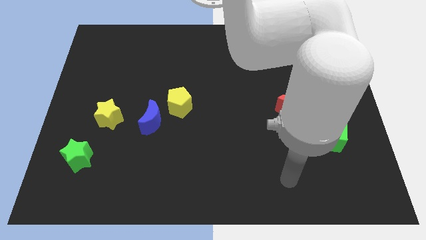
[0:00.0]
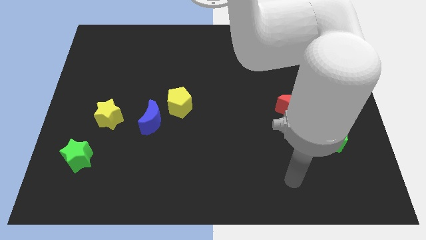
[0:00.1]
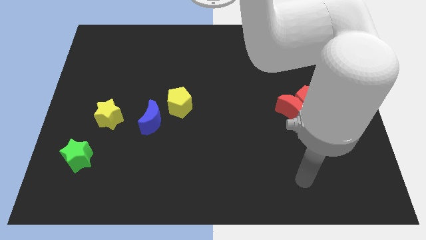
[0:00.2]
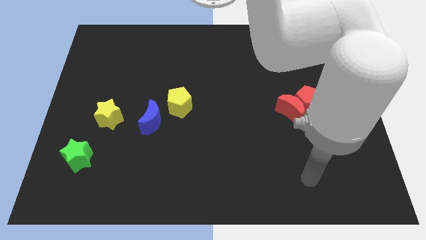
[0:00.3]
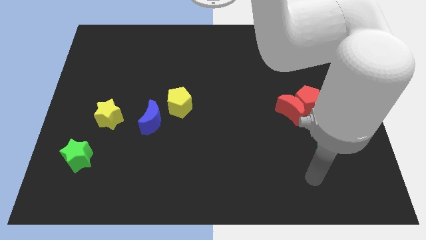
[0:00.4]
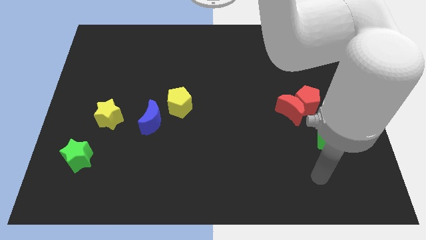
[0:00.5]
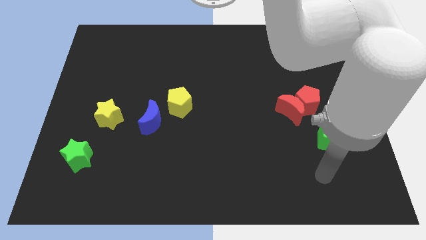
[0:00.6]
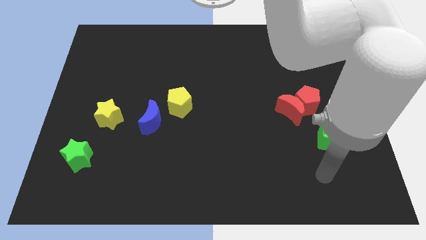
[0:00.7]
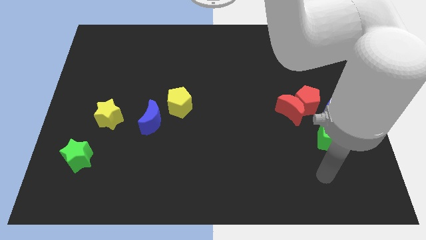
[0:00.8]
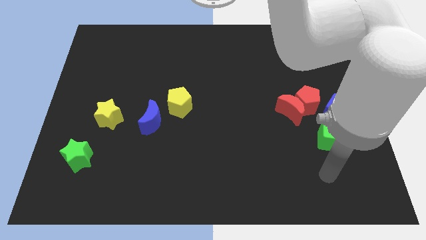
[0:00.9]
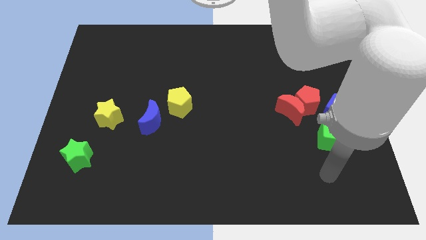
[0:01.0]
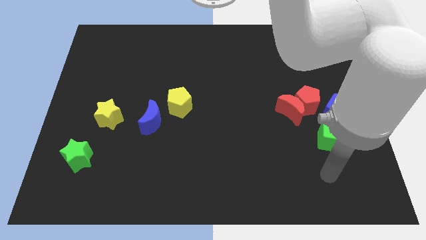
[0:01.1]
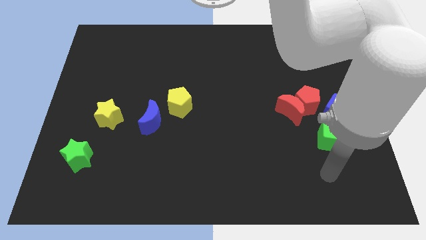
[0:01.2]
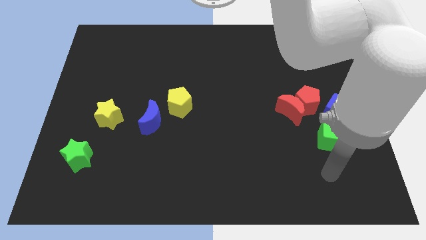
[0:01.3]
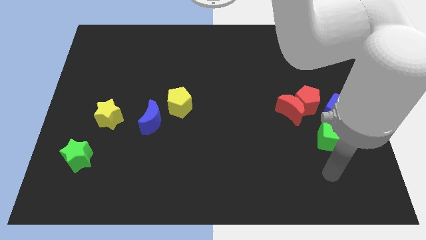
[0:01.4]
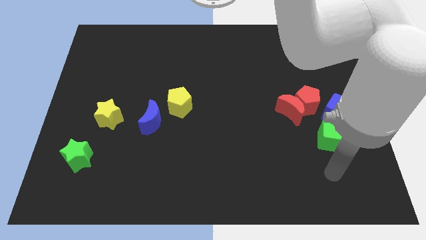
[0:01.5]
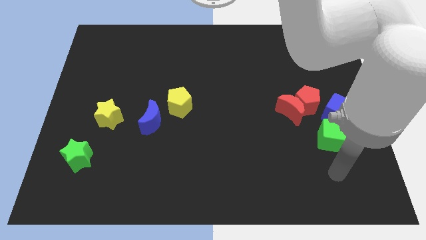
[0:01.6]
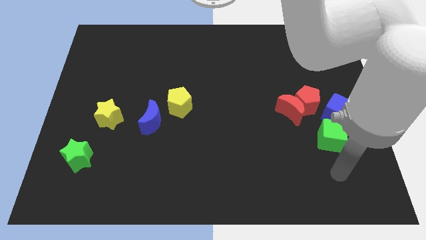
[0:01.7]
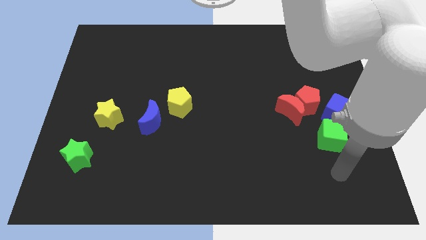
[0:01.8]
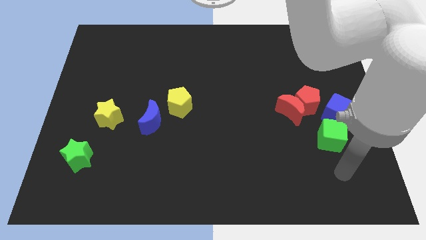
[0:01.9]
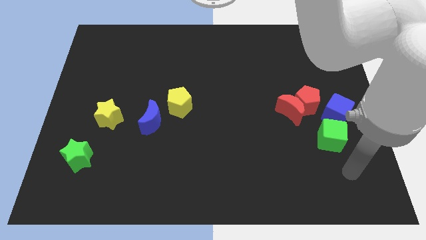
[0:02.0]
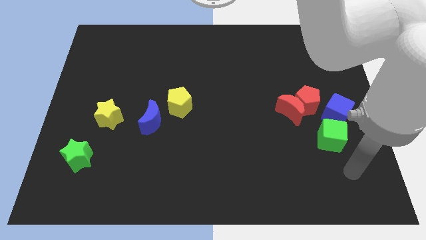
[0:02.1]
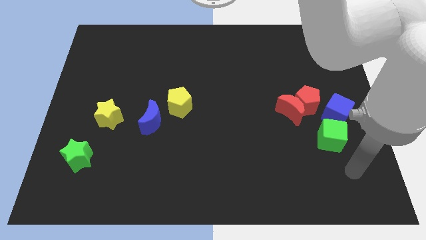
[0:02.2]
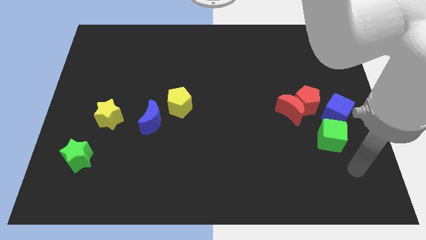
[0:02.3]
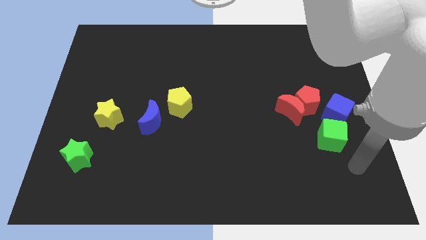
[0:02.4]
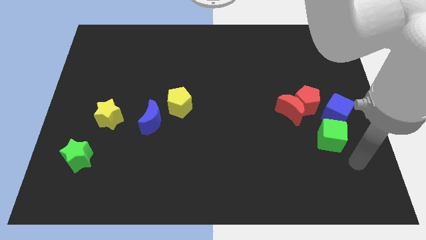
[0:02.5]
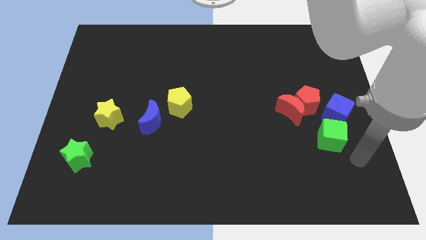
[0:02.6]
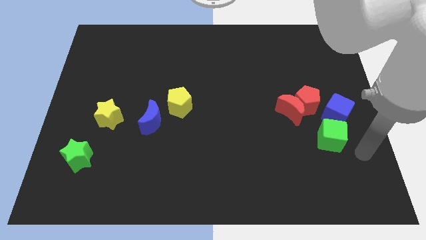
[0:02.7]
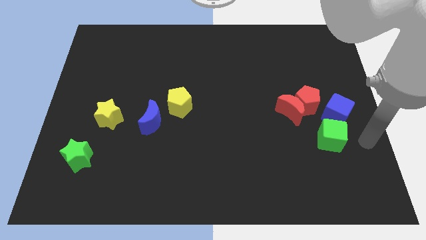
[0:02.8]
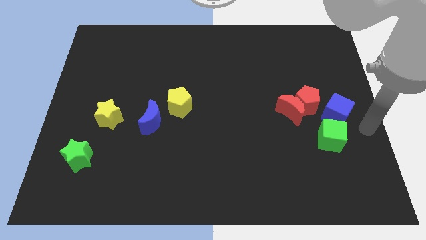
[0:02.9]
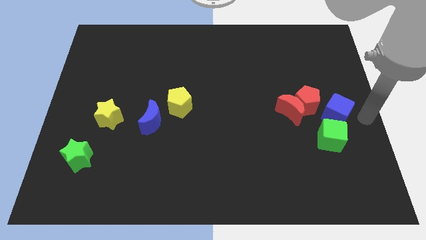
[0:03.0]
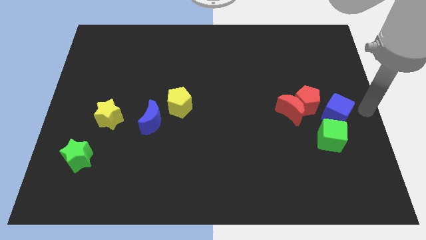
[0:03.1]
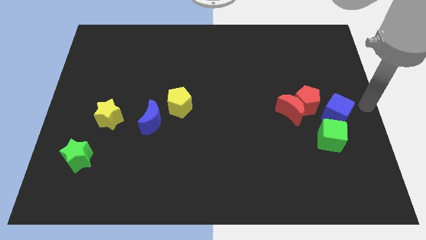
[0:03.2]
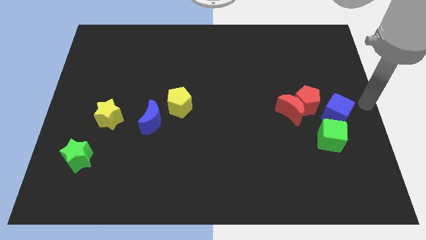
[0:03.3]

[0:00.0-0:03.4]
place the arm to the right of the blue cube

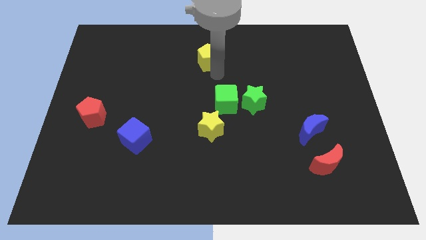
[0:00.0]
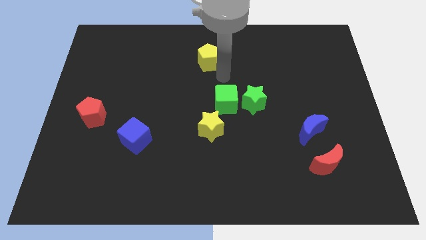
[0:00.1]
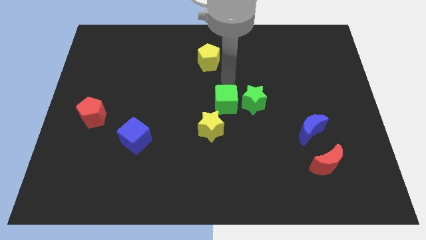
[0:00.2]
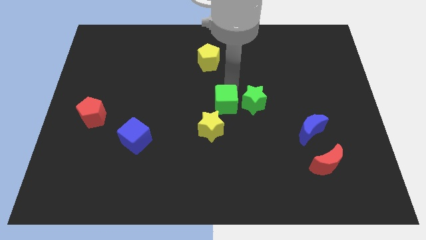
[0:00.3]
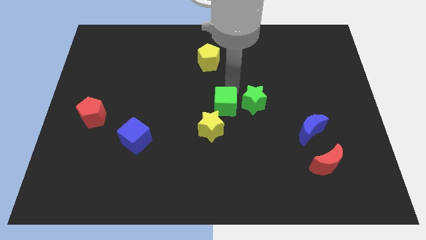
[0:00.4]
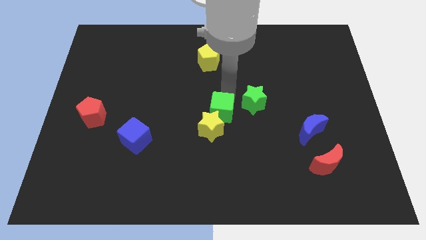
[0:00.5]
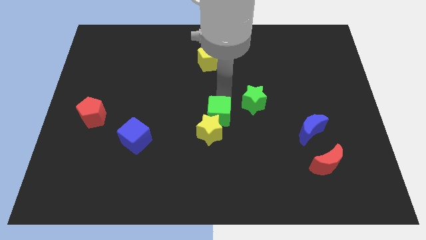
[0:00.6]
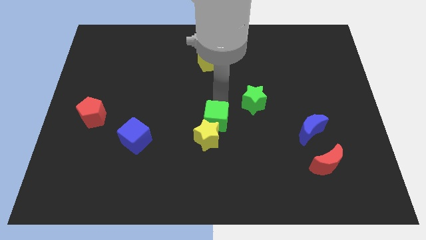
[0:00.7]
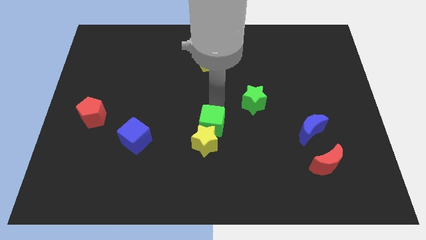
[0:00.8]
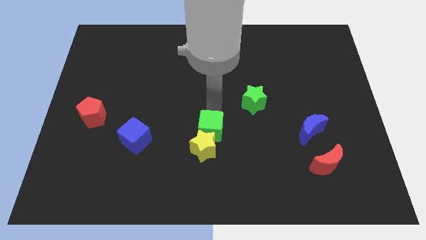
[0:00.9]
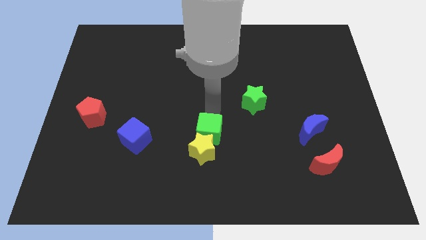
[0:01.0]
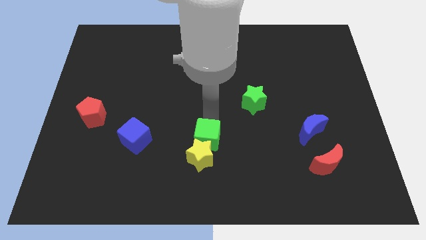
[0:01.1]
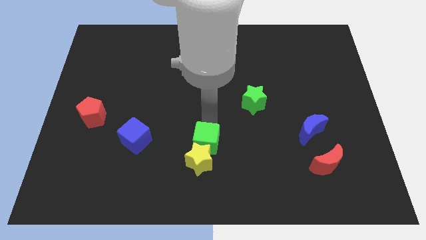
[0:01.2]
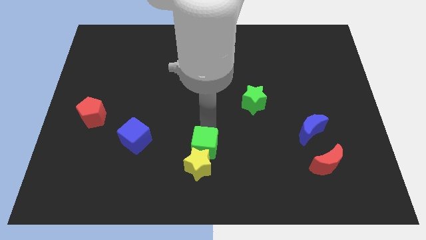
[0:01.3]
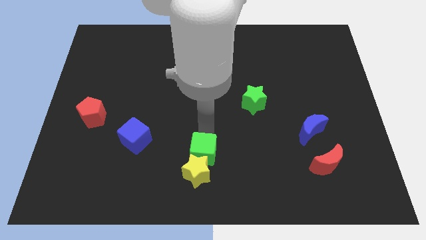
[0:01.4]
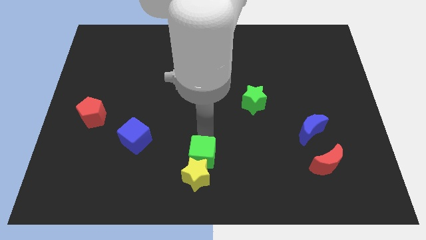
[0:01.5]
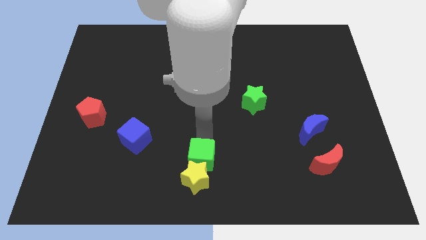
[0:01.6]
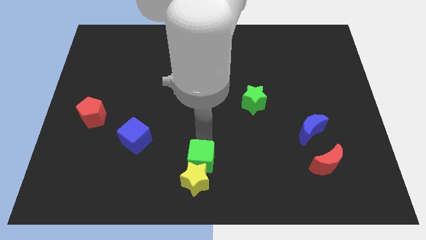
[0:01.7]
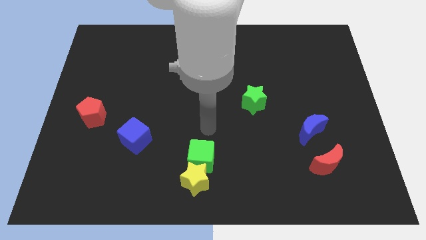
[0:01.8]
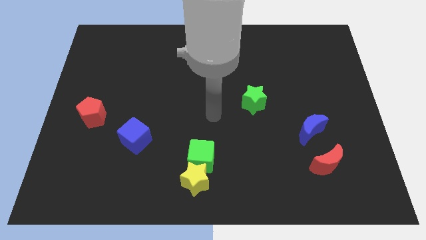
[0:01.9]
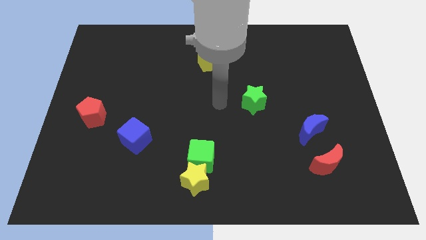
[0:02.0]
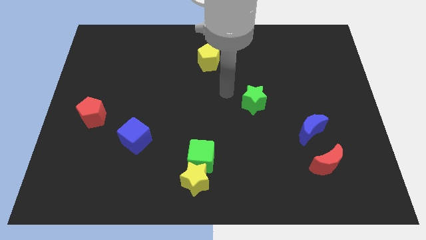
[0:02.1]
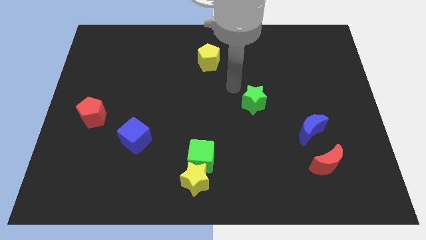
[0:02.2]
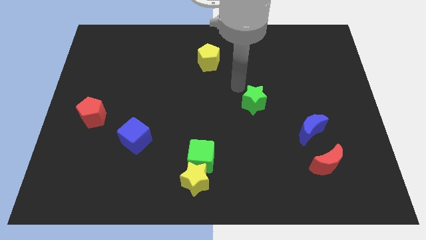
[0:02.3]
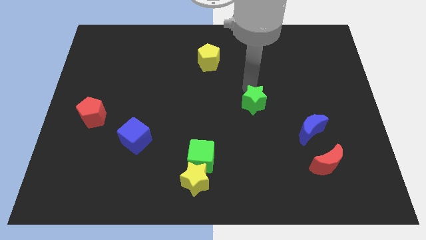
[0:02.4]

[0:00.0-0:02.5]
push the green cube and yellow star towards the bottom center of the board

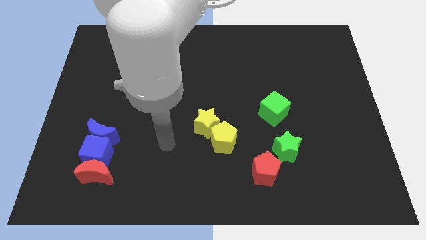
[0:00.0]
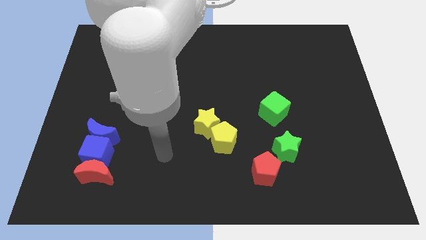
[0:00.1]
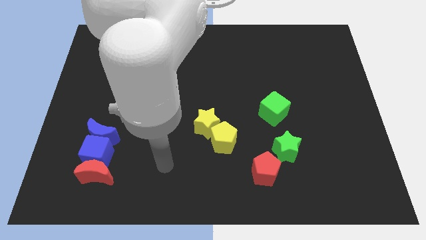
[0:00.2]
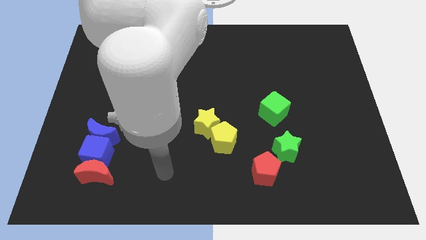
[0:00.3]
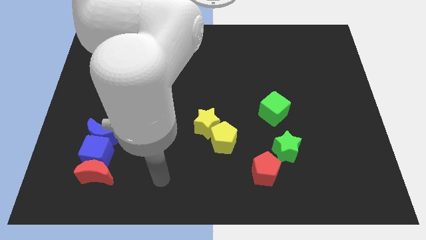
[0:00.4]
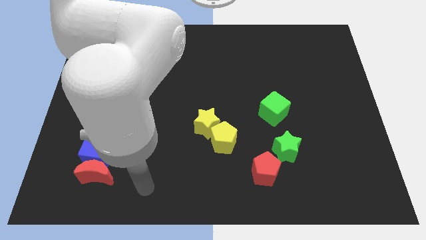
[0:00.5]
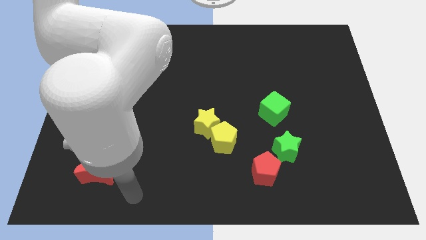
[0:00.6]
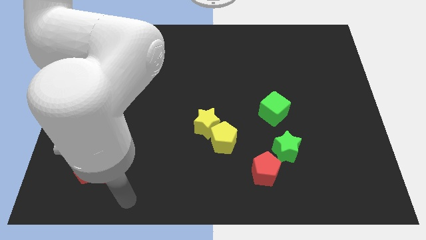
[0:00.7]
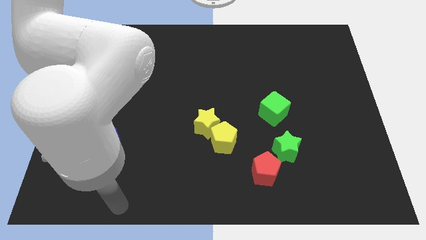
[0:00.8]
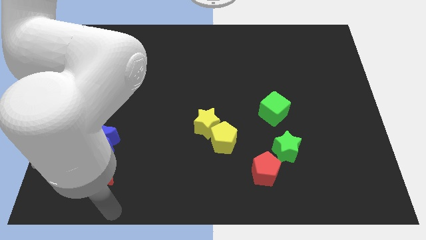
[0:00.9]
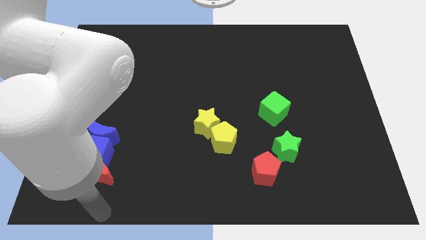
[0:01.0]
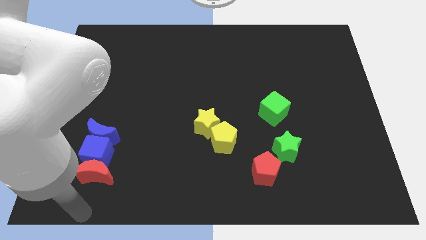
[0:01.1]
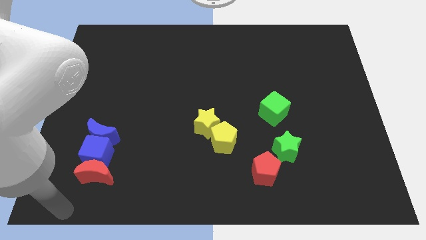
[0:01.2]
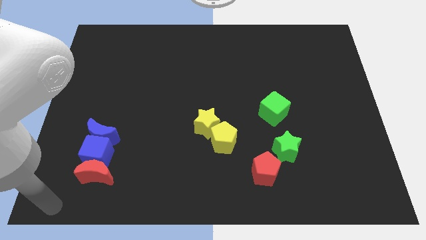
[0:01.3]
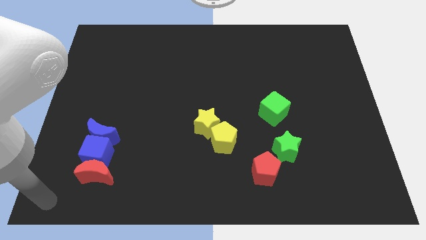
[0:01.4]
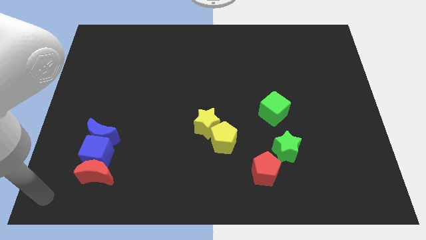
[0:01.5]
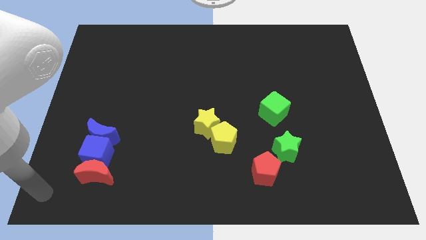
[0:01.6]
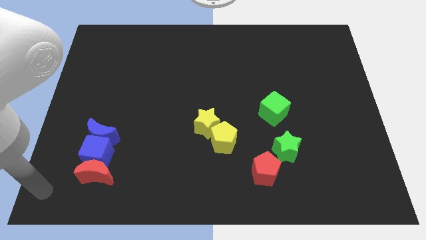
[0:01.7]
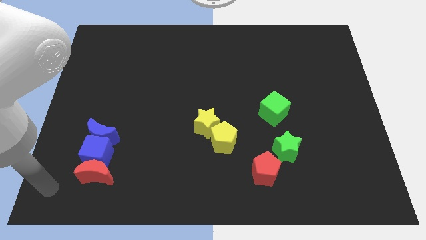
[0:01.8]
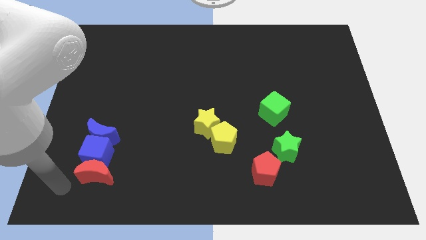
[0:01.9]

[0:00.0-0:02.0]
move your arm towards the left of the red crescent

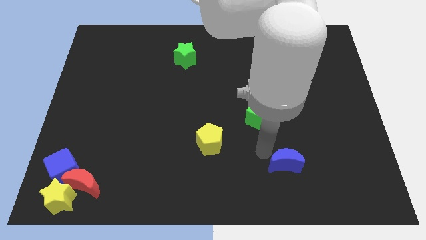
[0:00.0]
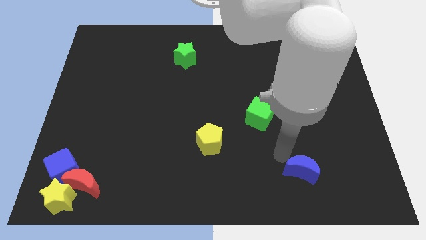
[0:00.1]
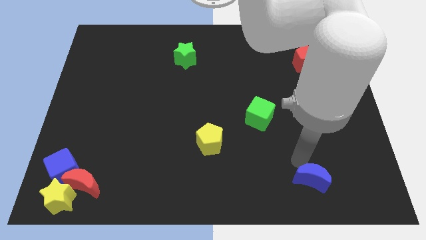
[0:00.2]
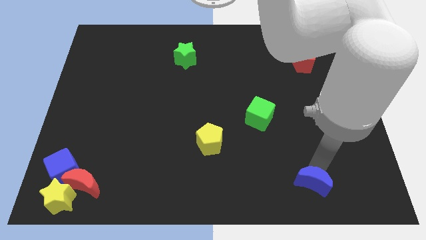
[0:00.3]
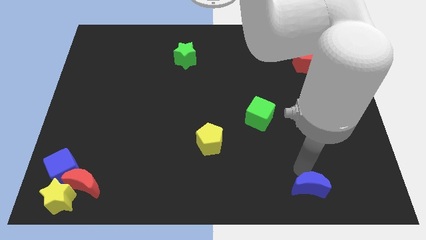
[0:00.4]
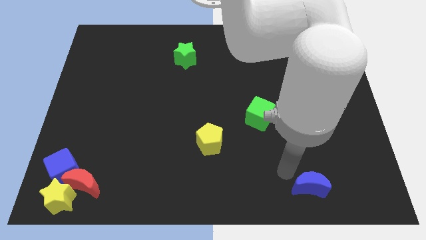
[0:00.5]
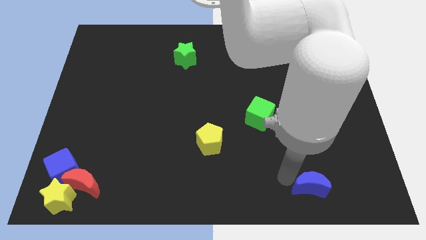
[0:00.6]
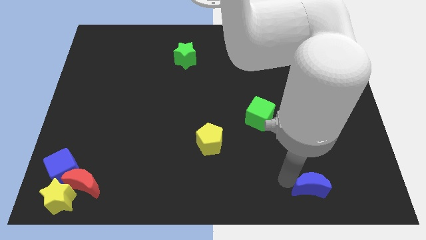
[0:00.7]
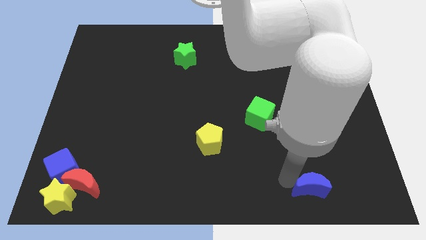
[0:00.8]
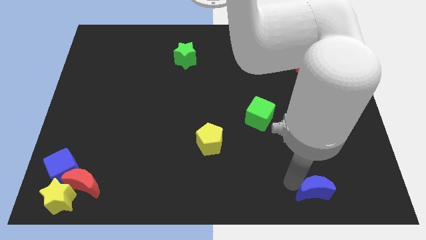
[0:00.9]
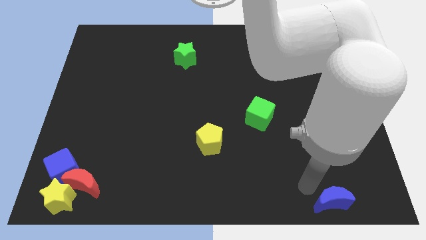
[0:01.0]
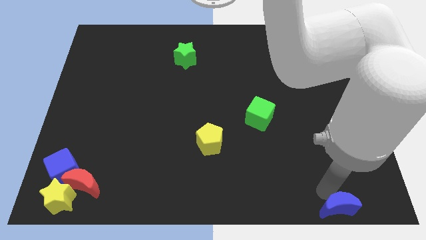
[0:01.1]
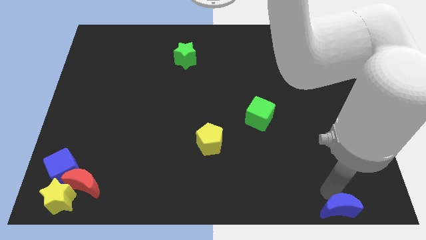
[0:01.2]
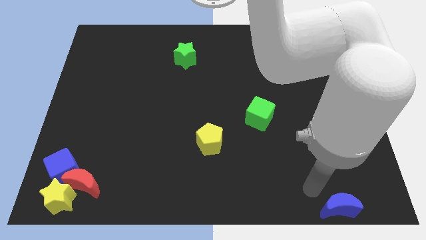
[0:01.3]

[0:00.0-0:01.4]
move the blue crescent towards bottom right side of the board
